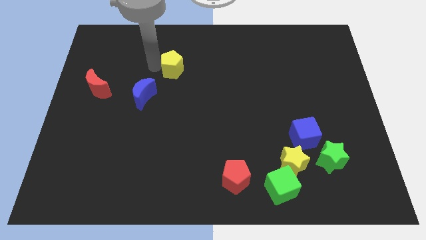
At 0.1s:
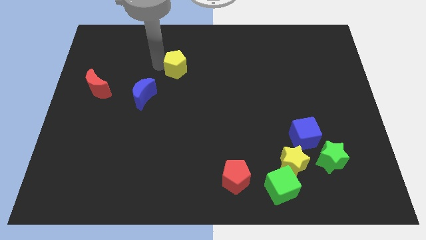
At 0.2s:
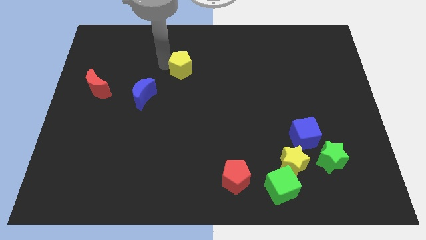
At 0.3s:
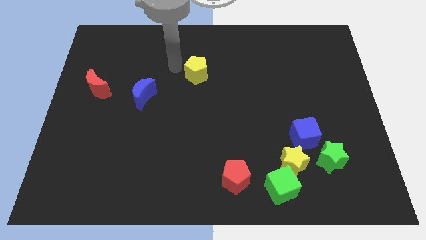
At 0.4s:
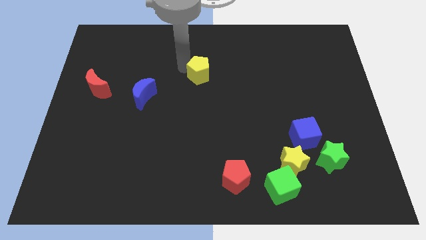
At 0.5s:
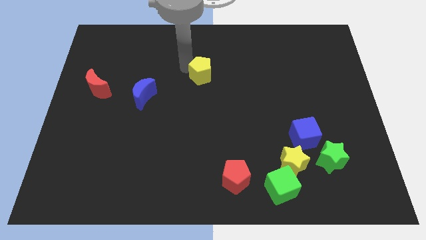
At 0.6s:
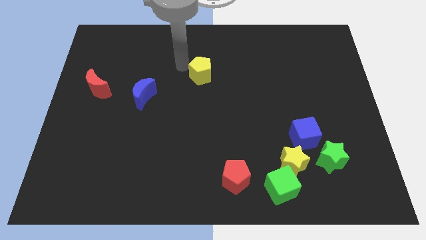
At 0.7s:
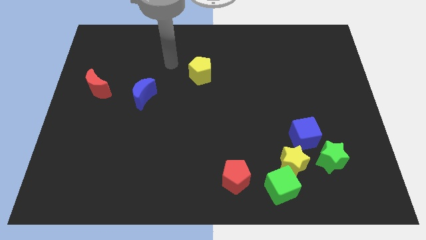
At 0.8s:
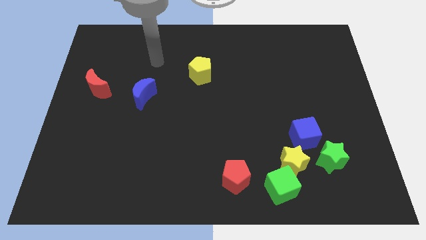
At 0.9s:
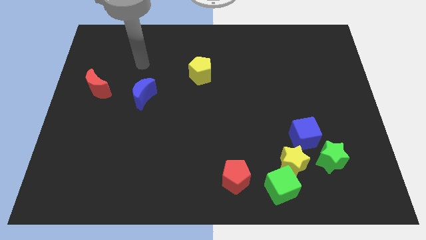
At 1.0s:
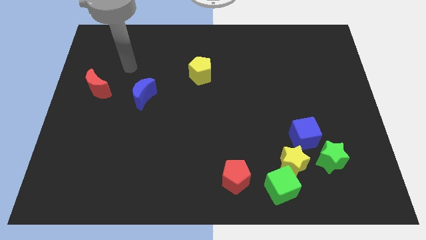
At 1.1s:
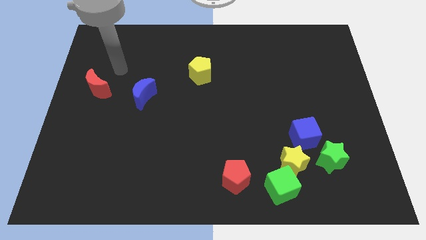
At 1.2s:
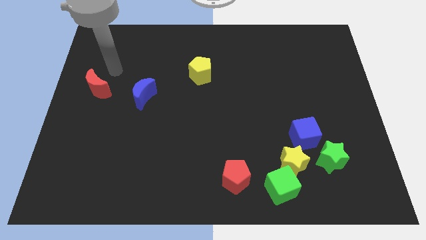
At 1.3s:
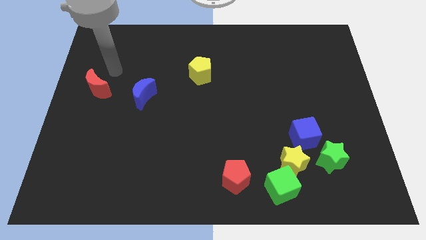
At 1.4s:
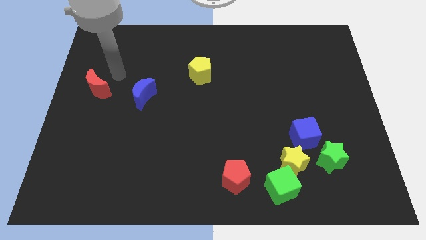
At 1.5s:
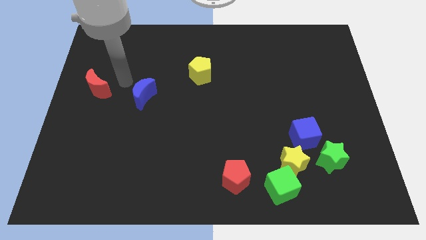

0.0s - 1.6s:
push yellow block to its right

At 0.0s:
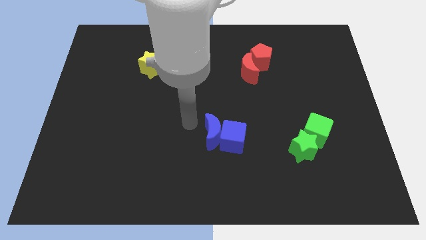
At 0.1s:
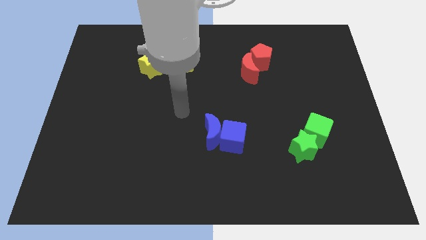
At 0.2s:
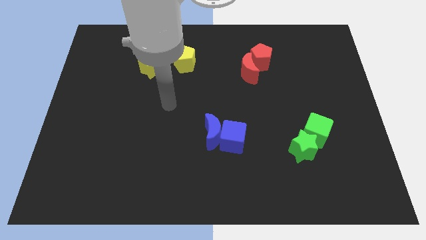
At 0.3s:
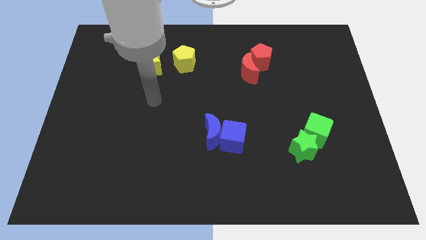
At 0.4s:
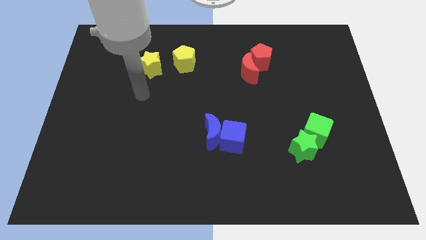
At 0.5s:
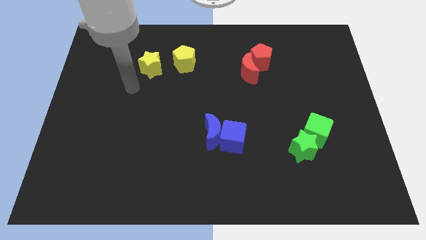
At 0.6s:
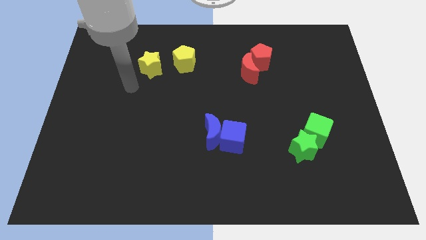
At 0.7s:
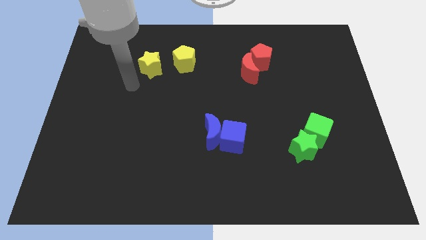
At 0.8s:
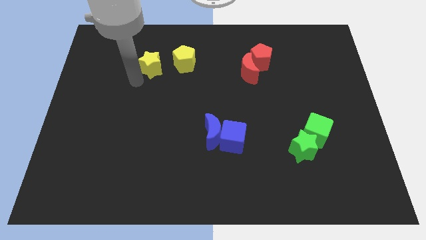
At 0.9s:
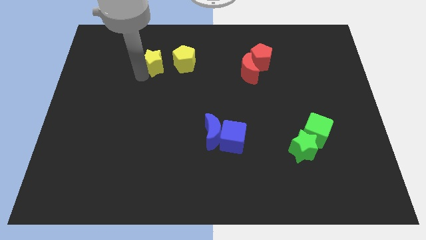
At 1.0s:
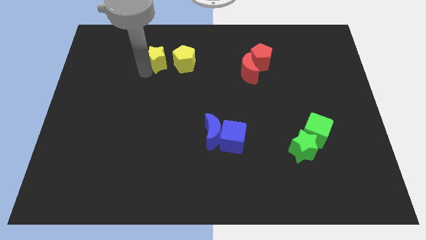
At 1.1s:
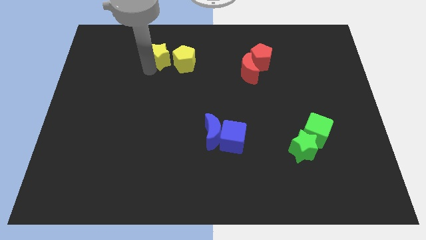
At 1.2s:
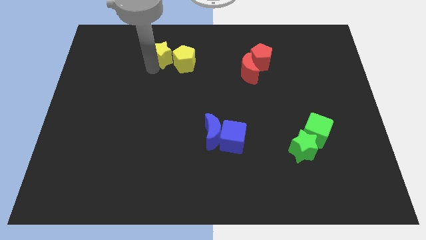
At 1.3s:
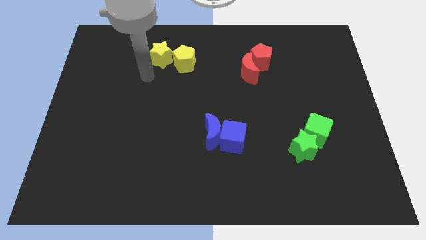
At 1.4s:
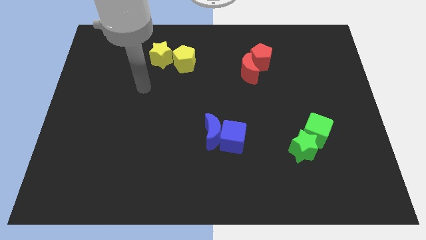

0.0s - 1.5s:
push the yellow star into the yellow pentagon

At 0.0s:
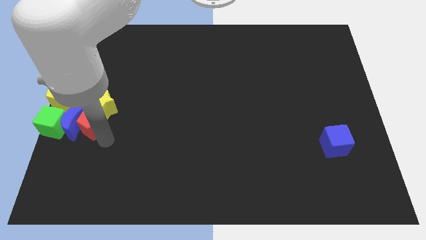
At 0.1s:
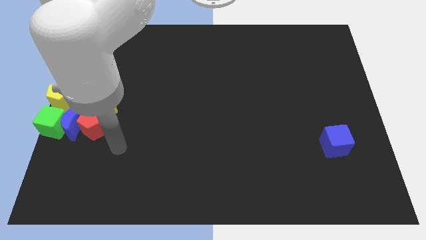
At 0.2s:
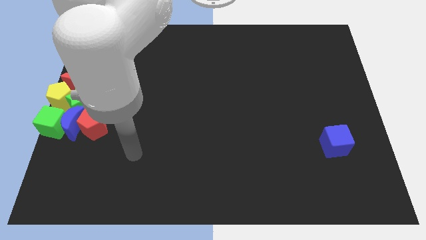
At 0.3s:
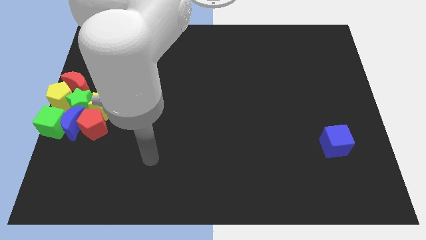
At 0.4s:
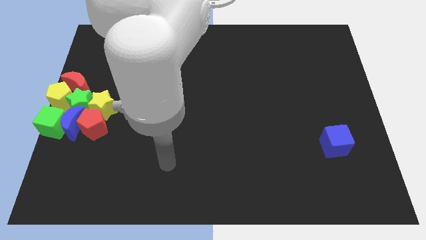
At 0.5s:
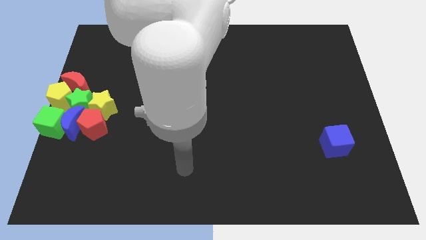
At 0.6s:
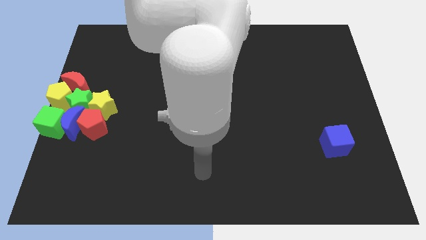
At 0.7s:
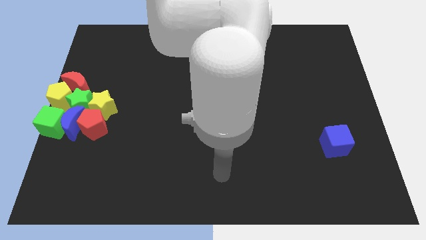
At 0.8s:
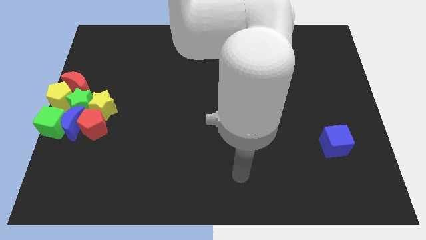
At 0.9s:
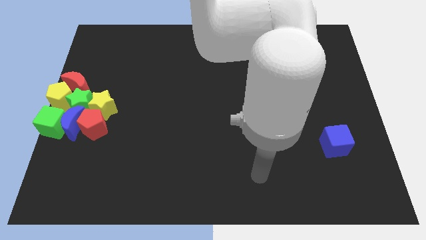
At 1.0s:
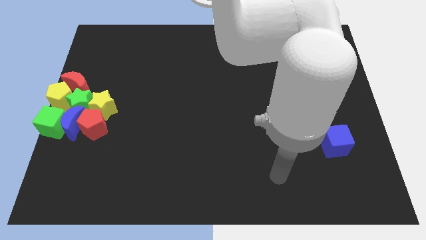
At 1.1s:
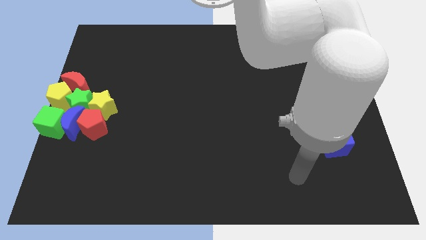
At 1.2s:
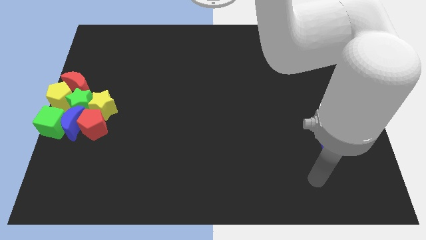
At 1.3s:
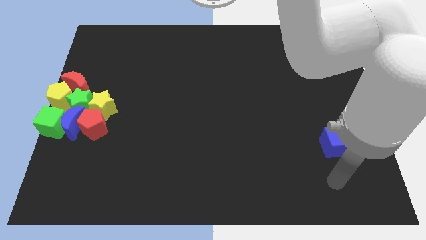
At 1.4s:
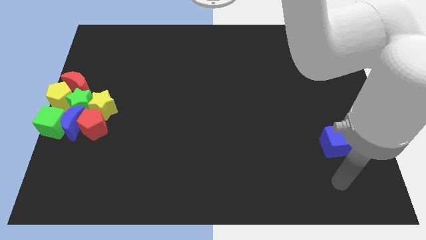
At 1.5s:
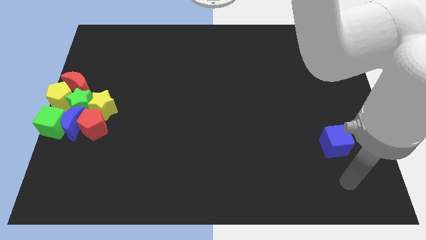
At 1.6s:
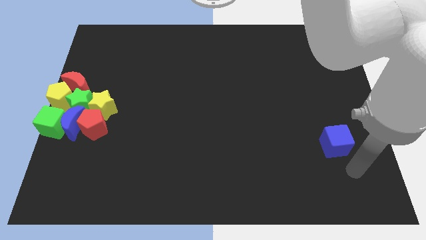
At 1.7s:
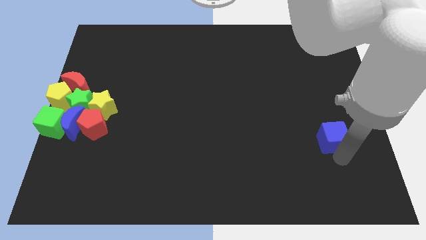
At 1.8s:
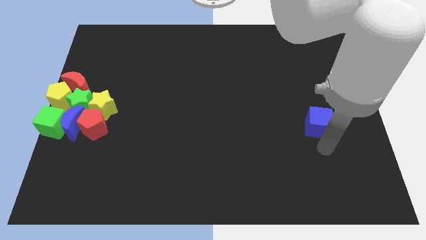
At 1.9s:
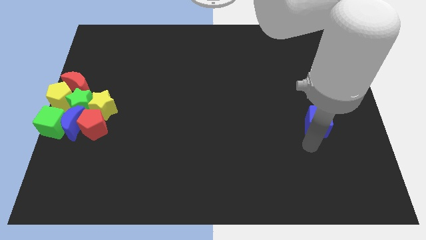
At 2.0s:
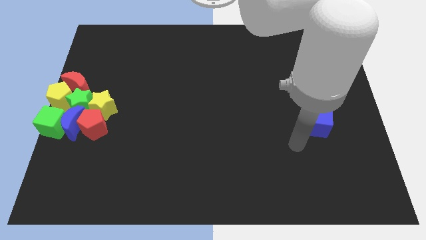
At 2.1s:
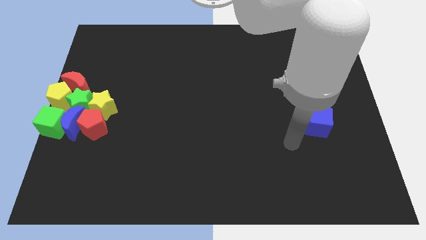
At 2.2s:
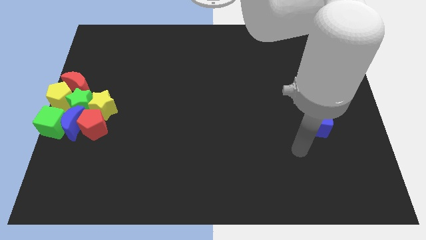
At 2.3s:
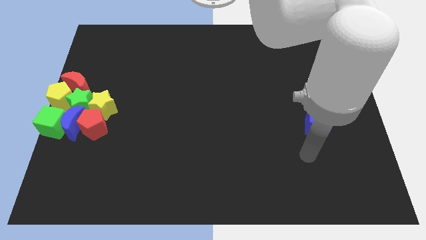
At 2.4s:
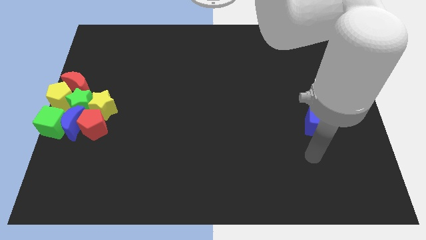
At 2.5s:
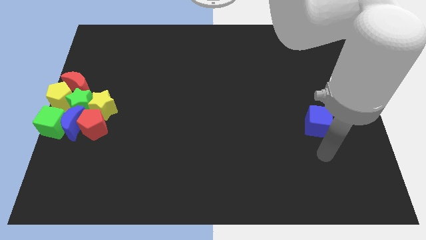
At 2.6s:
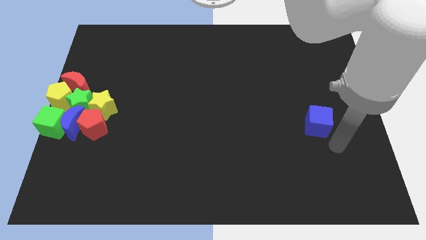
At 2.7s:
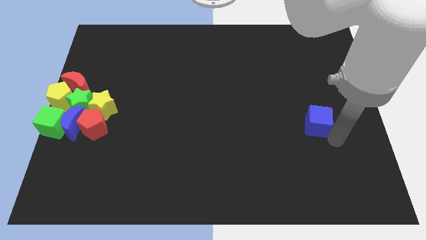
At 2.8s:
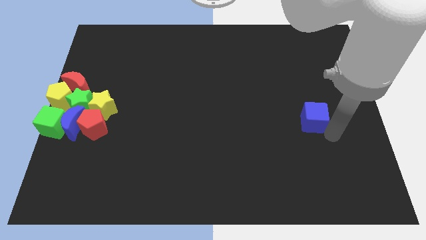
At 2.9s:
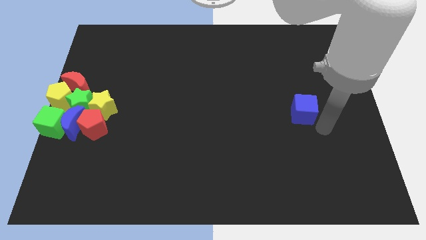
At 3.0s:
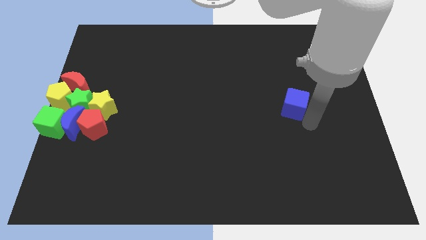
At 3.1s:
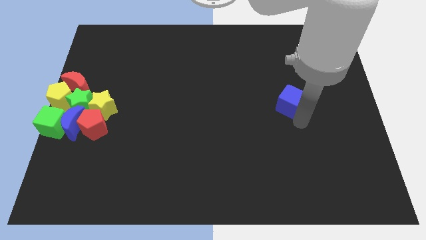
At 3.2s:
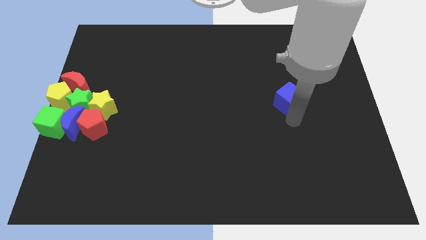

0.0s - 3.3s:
move the blue cube parallel right to the yellow star

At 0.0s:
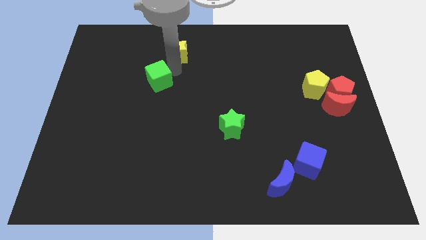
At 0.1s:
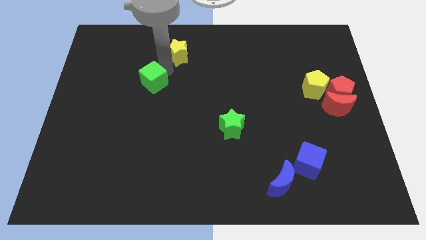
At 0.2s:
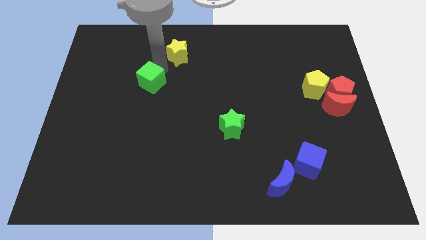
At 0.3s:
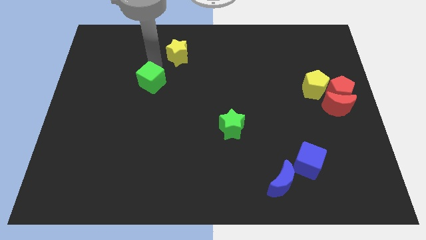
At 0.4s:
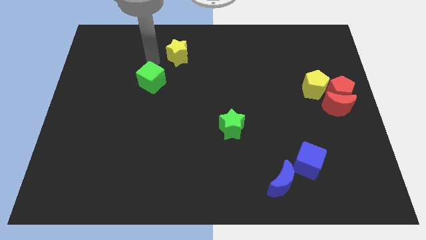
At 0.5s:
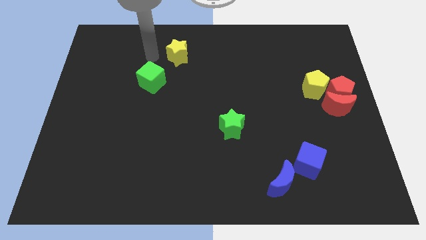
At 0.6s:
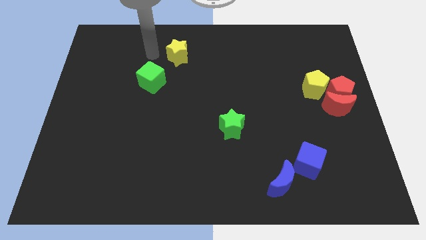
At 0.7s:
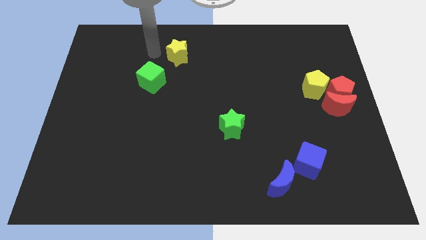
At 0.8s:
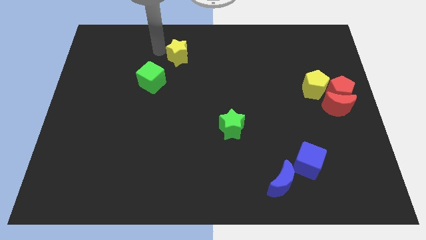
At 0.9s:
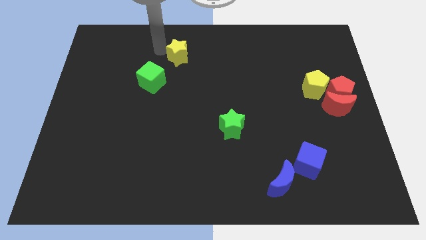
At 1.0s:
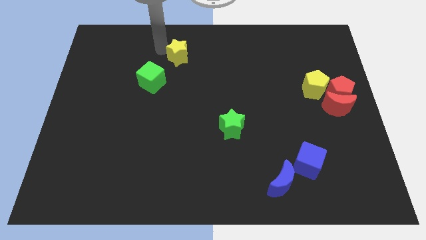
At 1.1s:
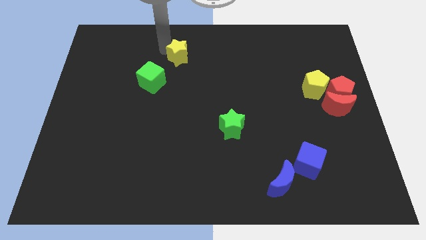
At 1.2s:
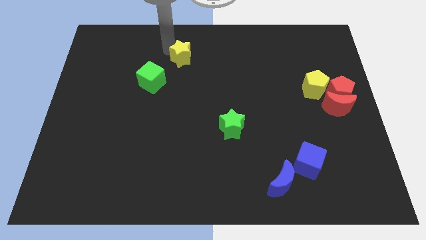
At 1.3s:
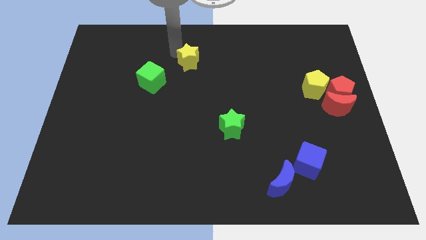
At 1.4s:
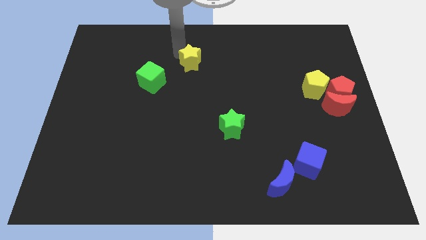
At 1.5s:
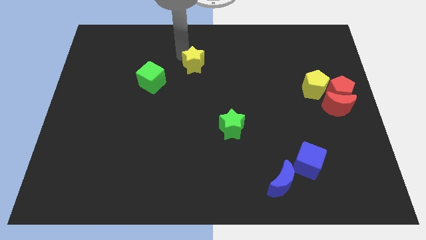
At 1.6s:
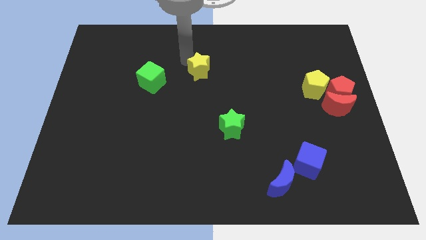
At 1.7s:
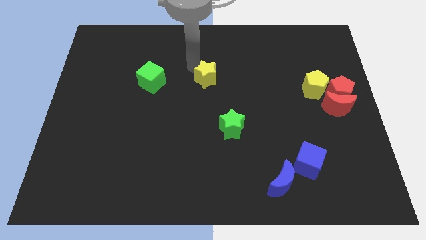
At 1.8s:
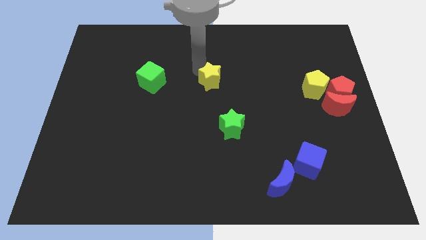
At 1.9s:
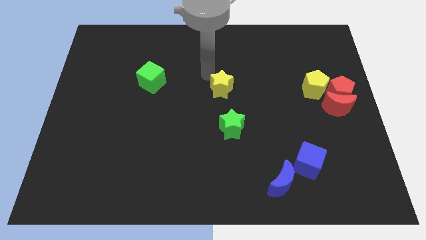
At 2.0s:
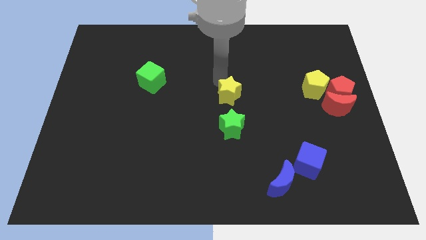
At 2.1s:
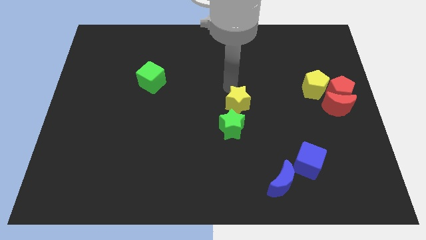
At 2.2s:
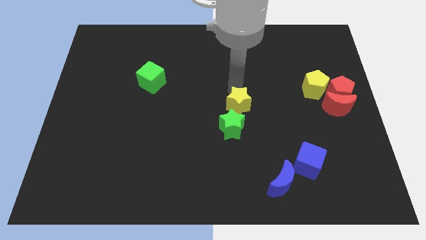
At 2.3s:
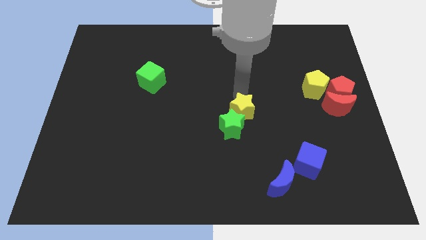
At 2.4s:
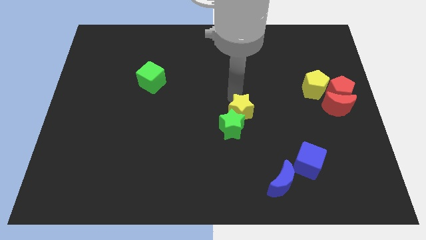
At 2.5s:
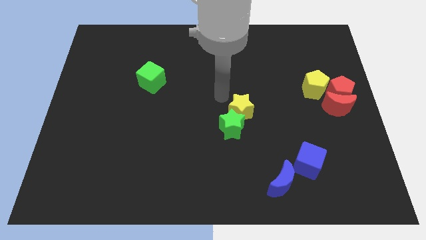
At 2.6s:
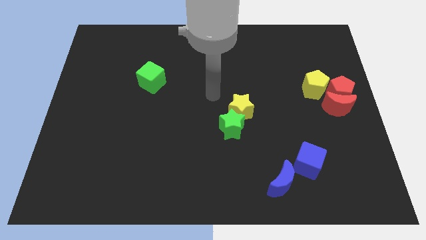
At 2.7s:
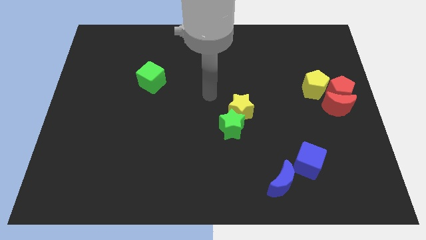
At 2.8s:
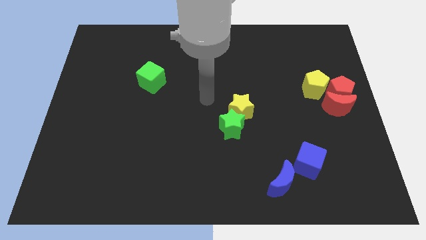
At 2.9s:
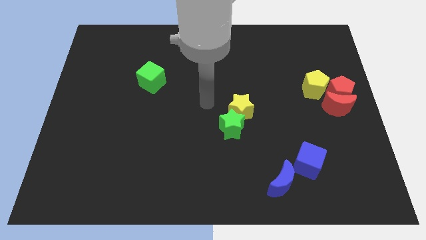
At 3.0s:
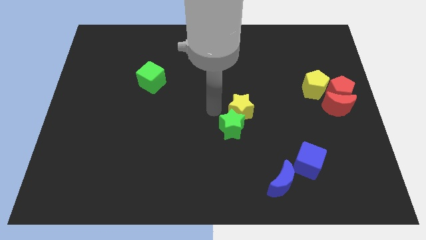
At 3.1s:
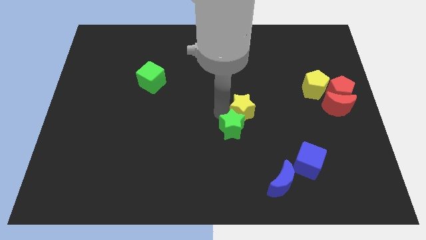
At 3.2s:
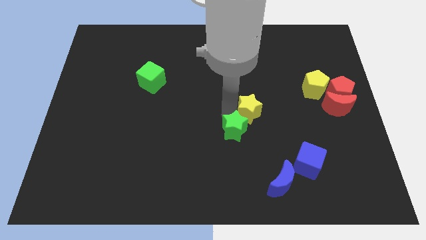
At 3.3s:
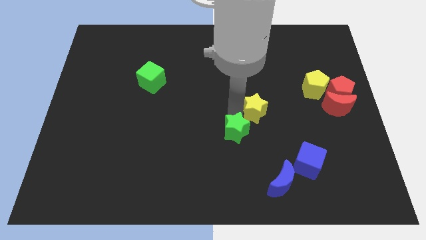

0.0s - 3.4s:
move the yellow star close to the green star
